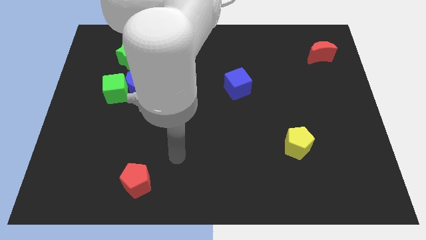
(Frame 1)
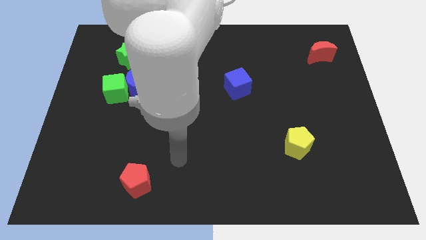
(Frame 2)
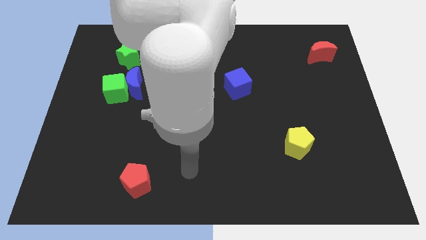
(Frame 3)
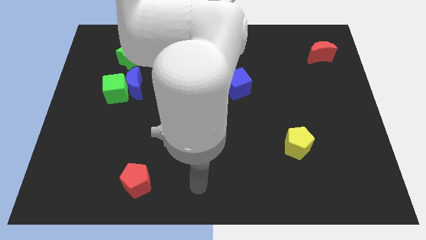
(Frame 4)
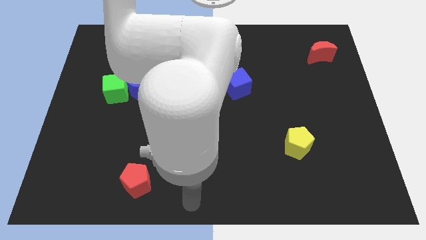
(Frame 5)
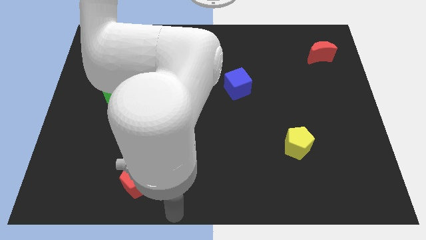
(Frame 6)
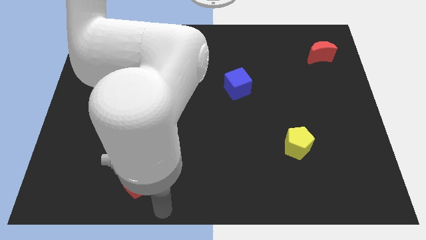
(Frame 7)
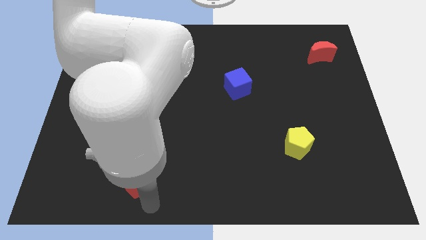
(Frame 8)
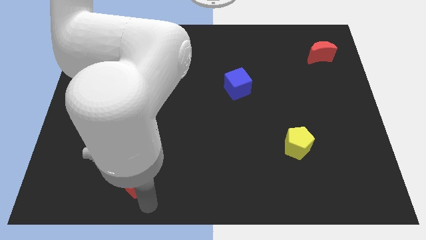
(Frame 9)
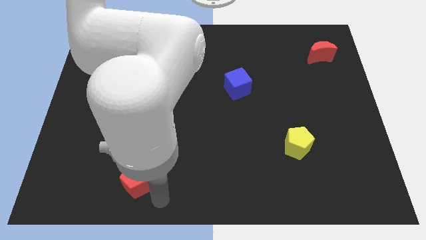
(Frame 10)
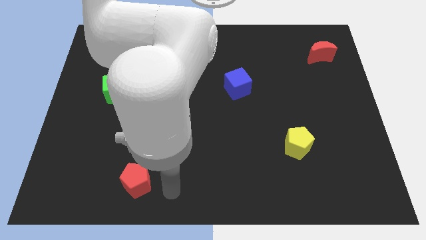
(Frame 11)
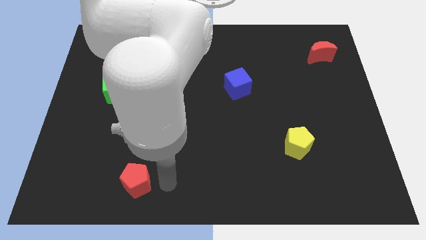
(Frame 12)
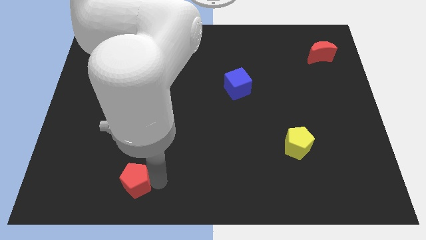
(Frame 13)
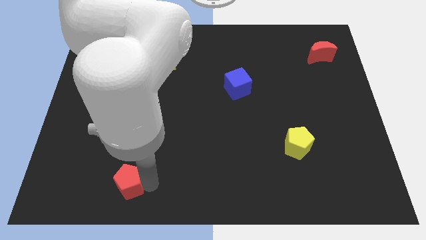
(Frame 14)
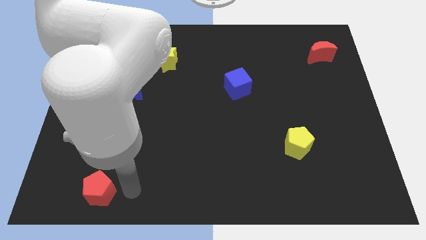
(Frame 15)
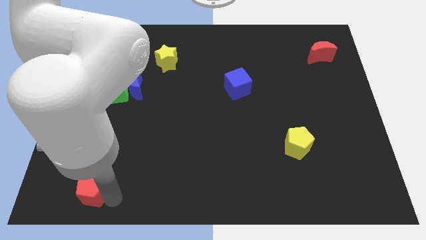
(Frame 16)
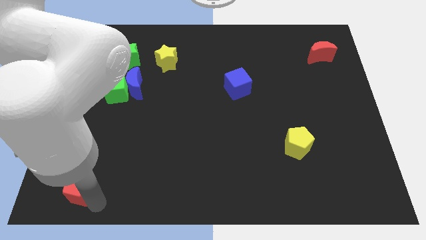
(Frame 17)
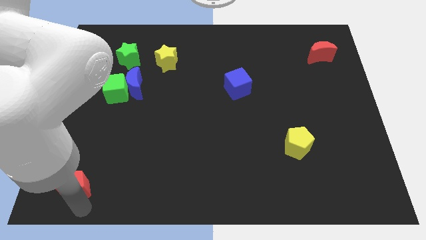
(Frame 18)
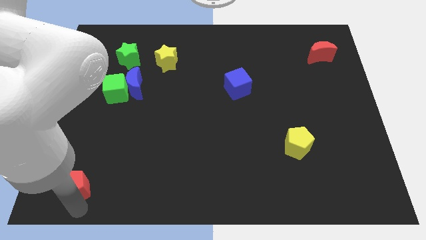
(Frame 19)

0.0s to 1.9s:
slide the red pentagon towards the bottom left

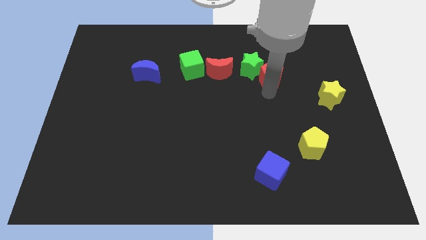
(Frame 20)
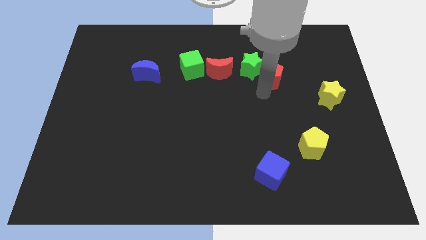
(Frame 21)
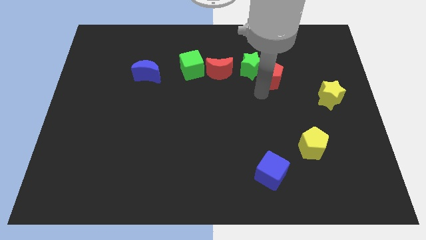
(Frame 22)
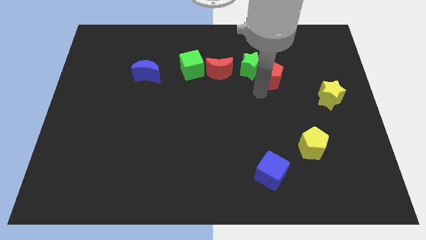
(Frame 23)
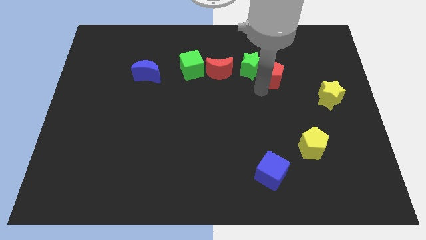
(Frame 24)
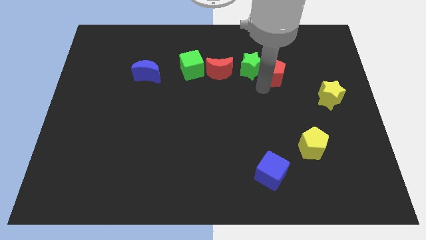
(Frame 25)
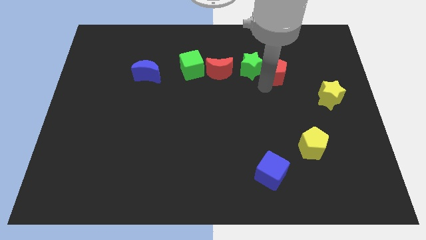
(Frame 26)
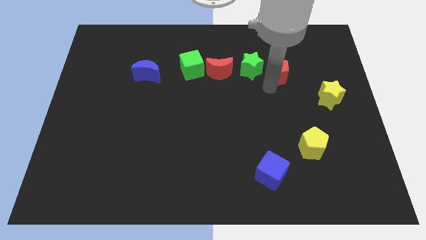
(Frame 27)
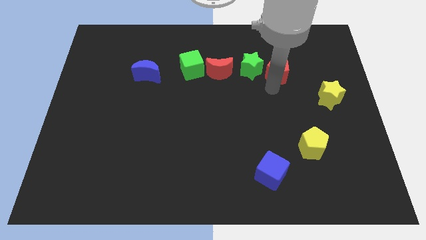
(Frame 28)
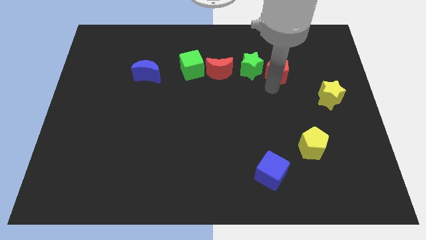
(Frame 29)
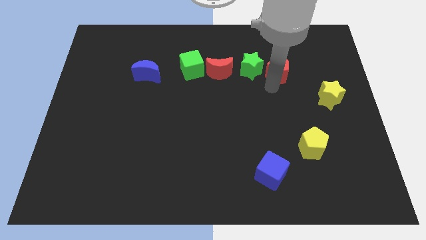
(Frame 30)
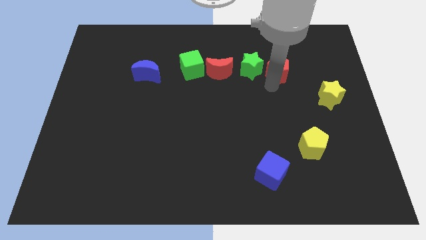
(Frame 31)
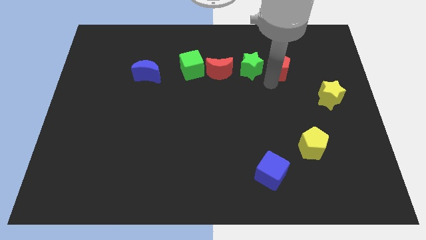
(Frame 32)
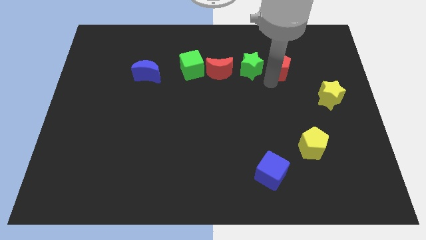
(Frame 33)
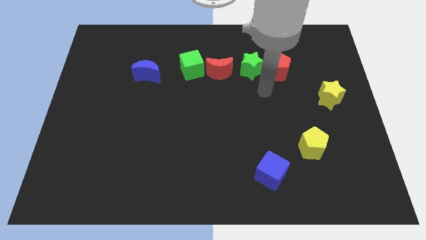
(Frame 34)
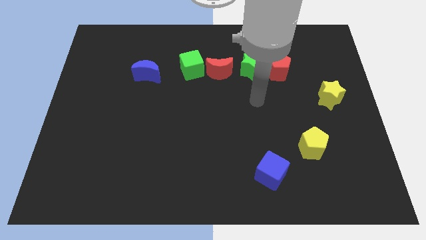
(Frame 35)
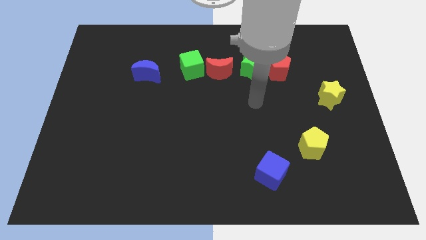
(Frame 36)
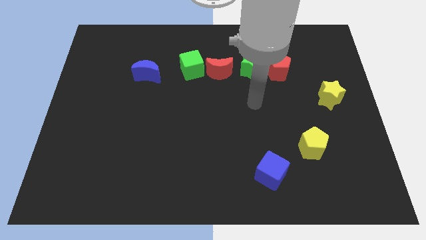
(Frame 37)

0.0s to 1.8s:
place the red pentagon near the green star

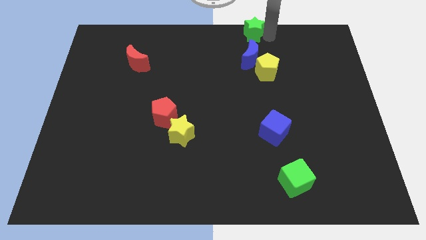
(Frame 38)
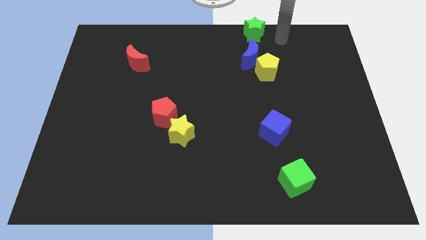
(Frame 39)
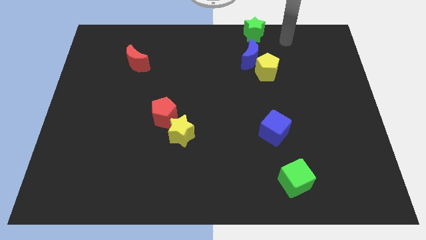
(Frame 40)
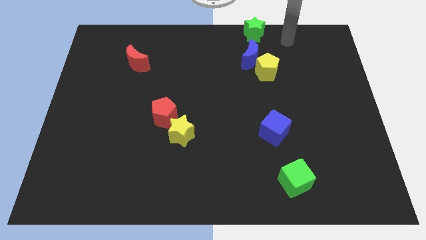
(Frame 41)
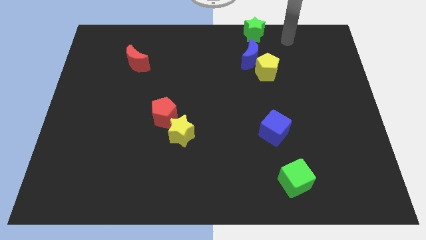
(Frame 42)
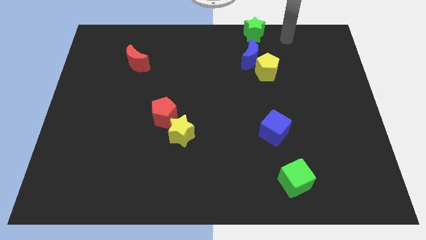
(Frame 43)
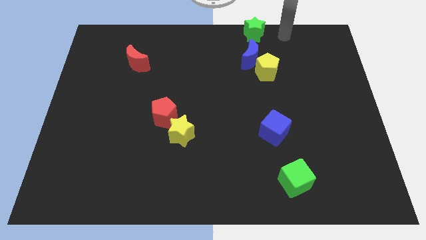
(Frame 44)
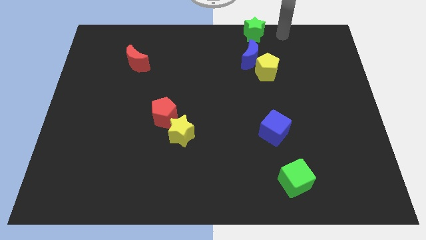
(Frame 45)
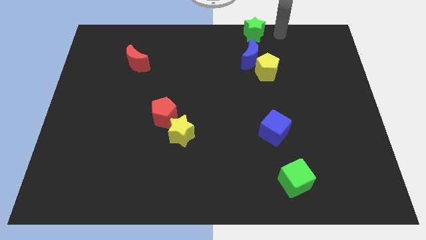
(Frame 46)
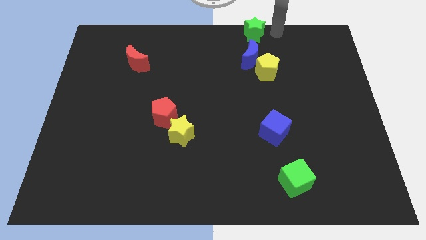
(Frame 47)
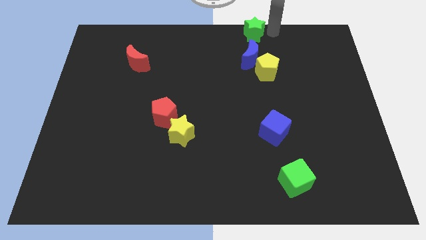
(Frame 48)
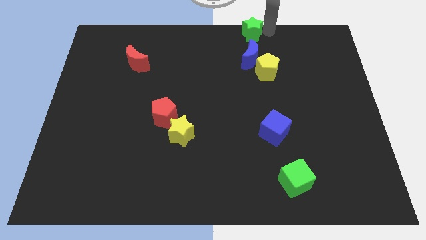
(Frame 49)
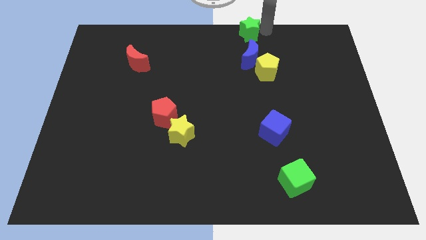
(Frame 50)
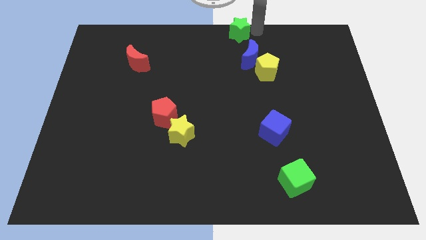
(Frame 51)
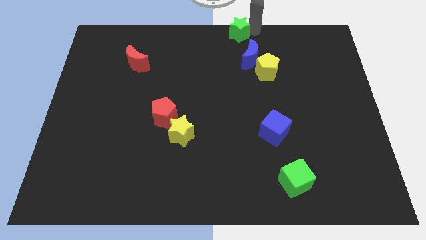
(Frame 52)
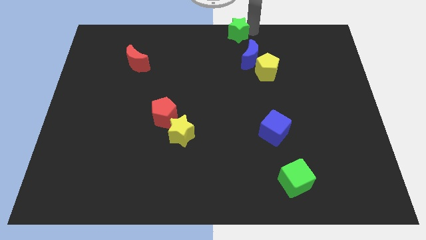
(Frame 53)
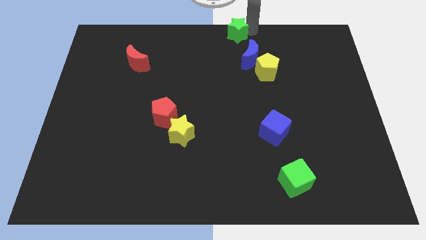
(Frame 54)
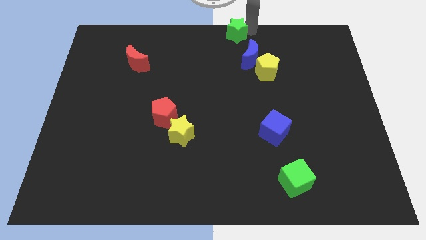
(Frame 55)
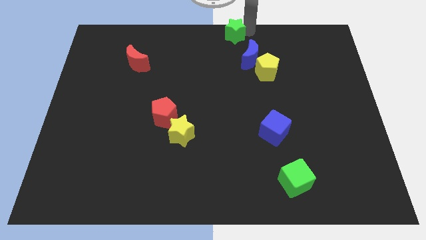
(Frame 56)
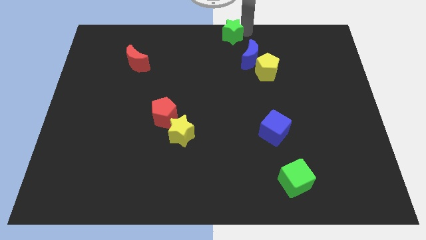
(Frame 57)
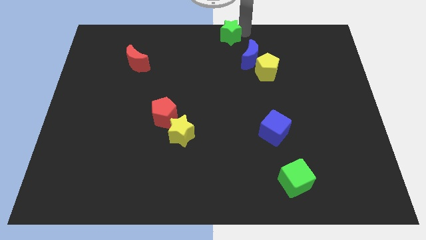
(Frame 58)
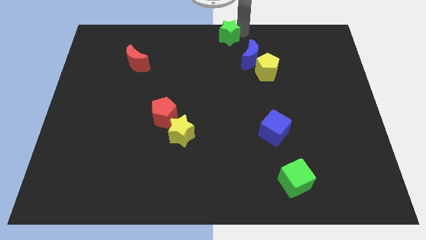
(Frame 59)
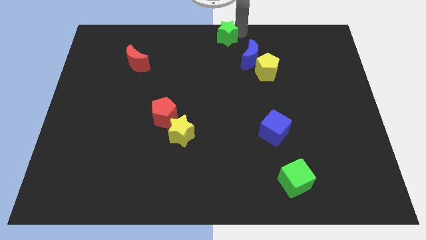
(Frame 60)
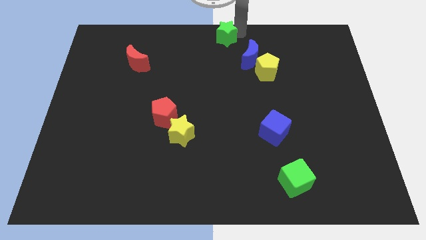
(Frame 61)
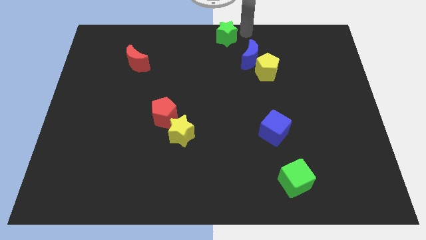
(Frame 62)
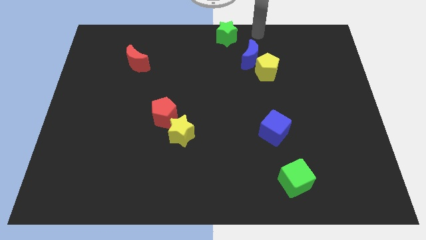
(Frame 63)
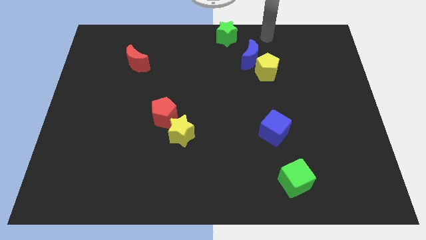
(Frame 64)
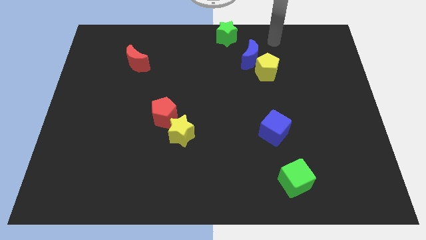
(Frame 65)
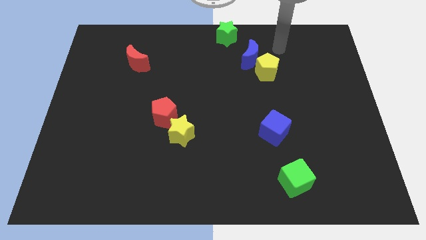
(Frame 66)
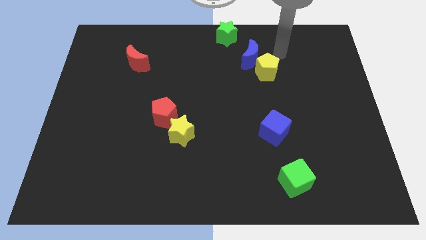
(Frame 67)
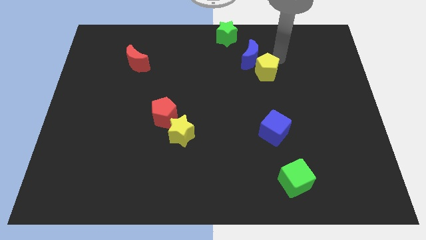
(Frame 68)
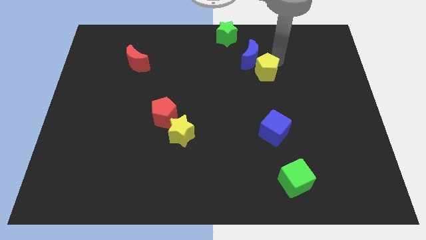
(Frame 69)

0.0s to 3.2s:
push the green star towards the left side of the board

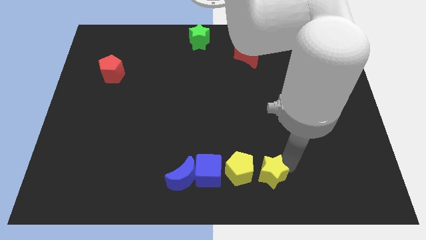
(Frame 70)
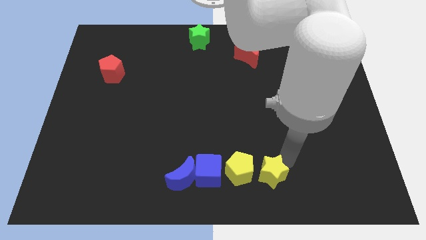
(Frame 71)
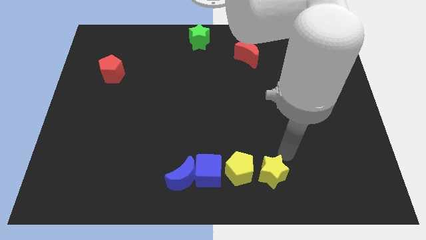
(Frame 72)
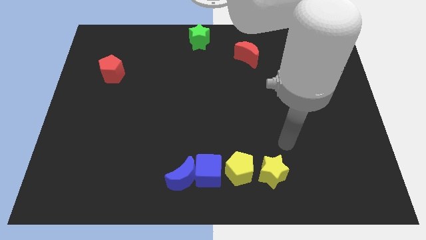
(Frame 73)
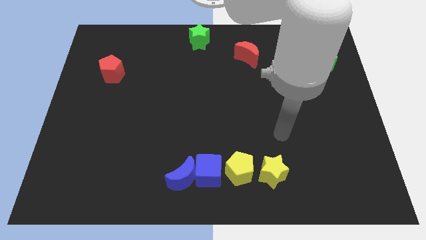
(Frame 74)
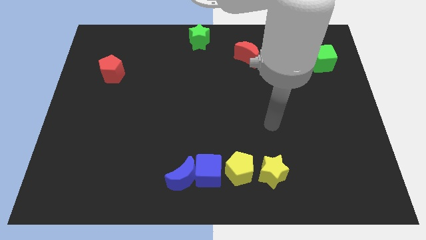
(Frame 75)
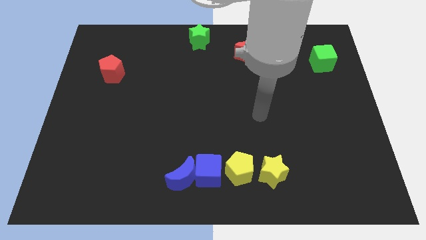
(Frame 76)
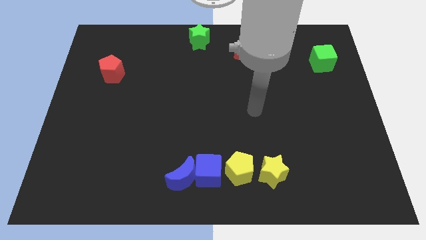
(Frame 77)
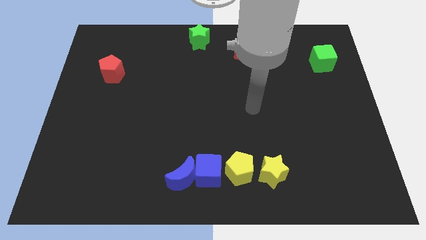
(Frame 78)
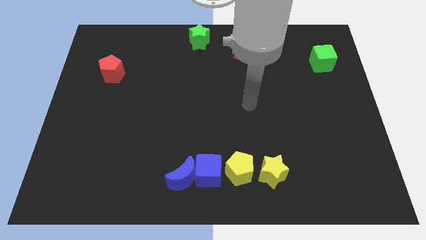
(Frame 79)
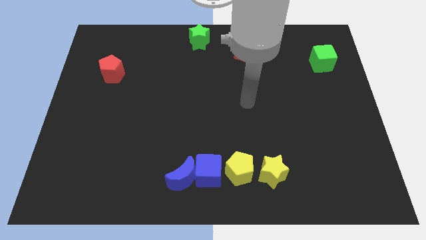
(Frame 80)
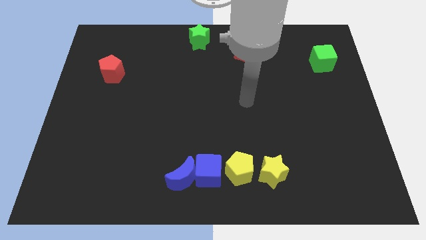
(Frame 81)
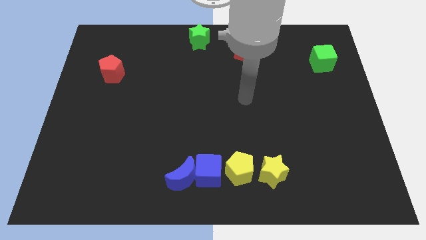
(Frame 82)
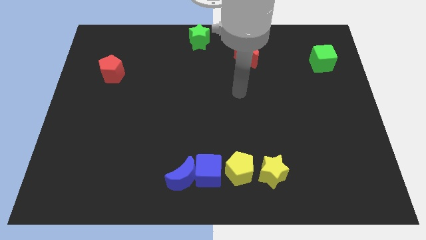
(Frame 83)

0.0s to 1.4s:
move your arm away from yellow star

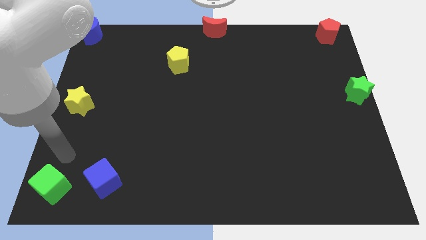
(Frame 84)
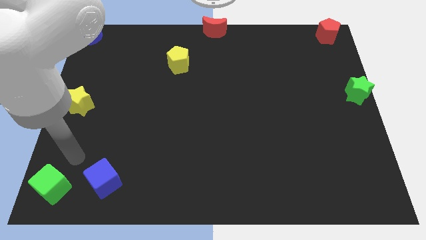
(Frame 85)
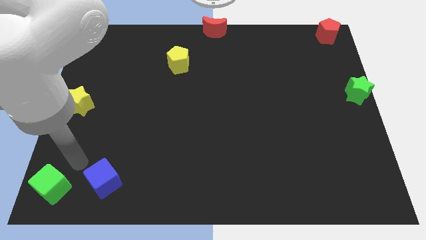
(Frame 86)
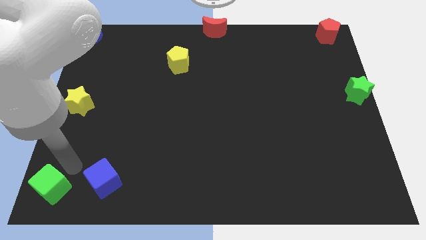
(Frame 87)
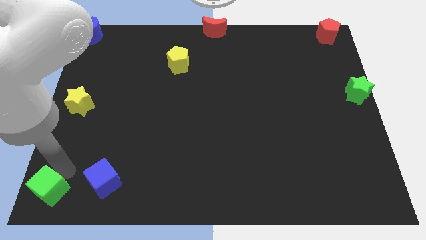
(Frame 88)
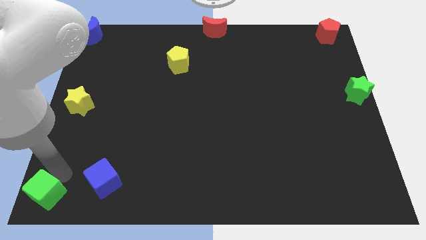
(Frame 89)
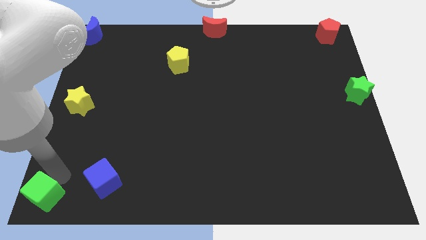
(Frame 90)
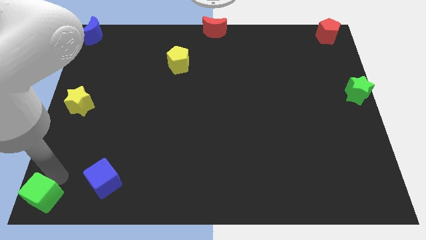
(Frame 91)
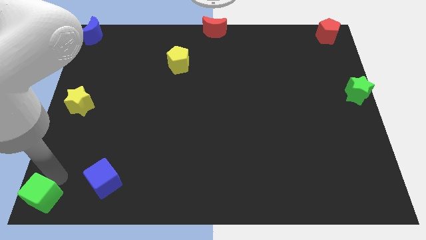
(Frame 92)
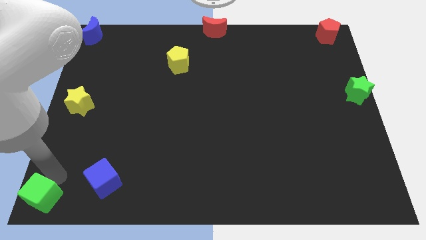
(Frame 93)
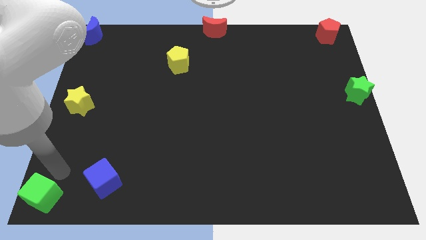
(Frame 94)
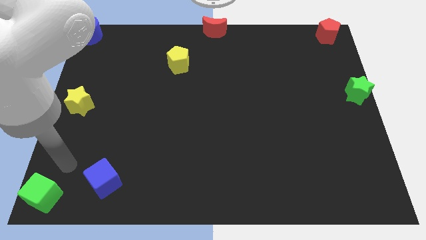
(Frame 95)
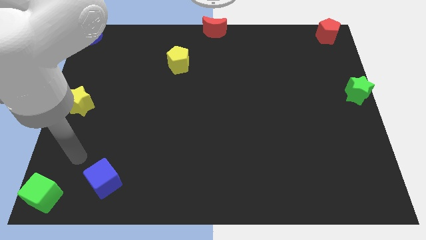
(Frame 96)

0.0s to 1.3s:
slide the green cube at the bottom left corner of the board
